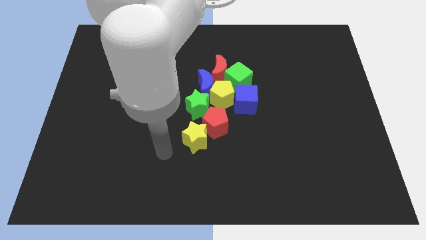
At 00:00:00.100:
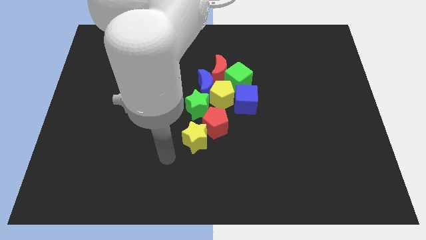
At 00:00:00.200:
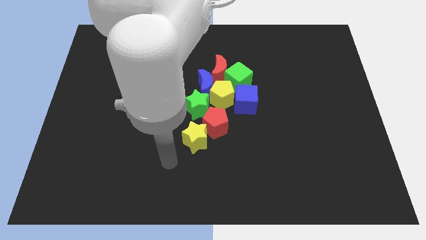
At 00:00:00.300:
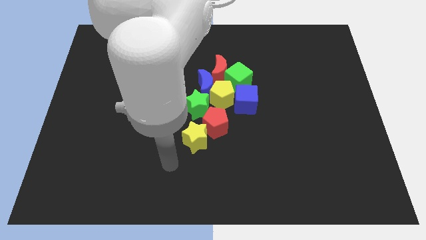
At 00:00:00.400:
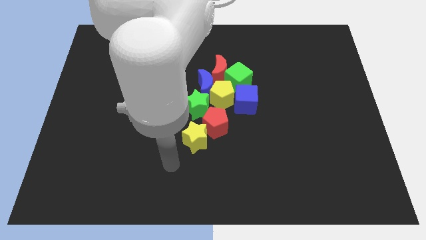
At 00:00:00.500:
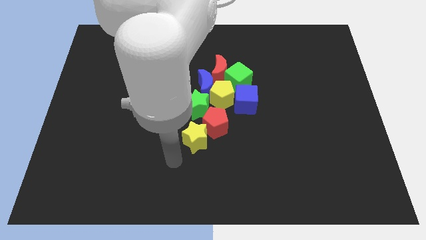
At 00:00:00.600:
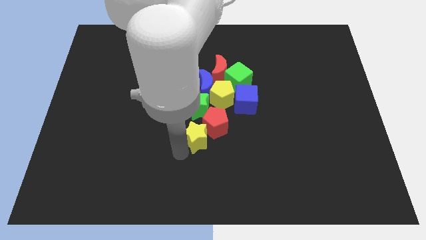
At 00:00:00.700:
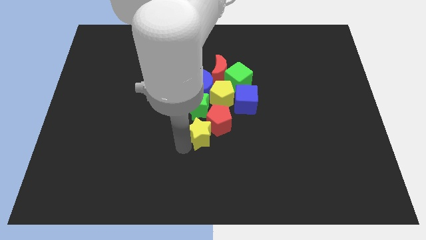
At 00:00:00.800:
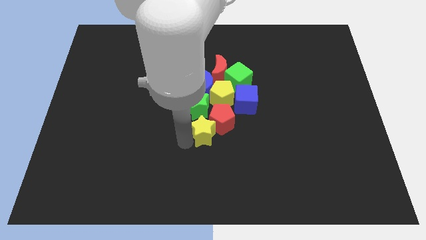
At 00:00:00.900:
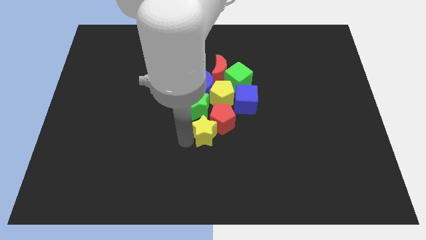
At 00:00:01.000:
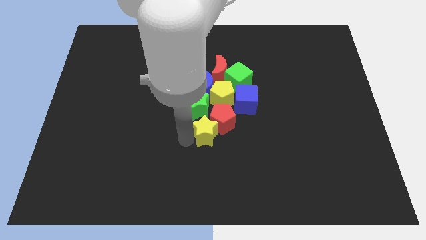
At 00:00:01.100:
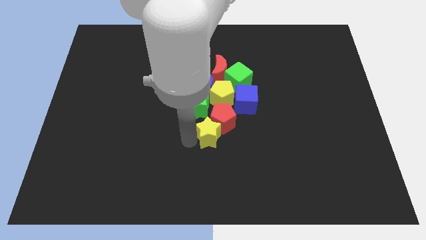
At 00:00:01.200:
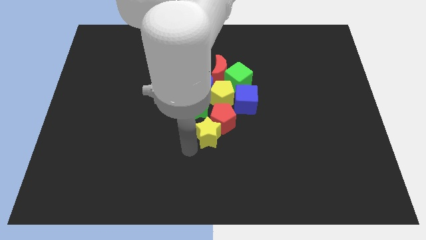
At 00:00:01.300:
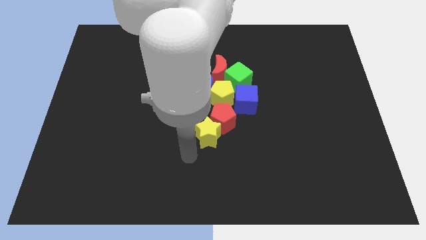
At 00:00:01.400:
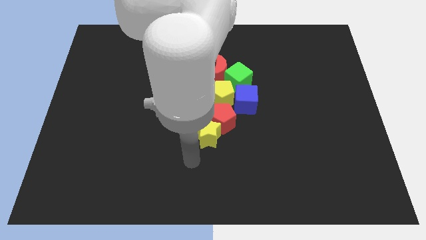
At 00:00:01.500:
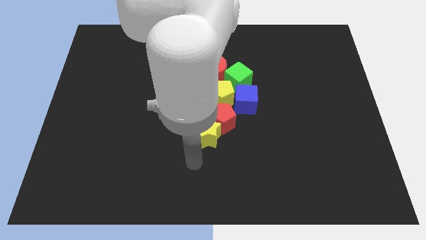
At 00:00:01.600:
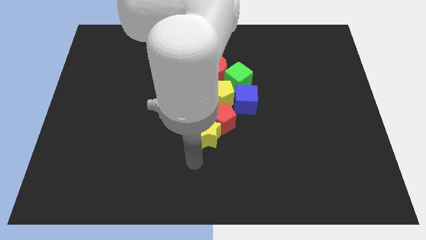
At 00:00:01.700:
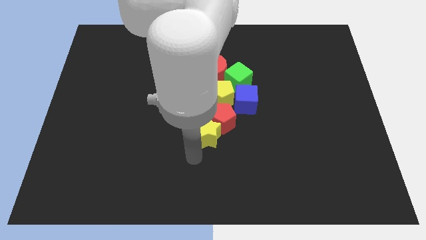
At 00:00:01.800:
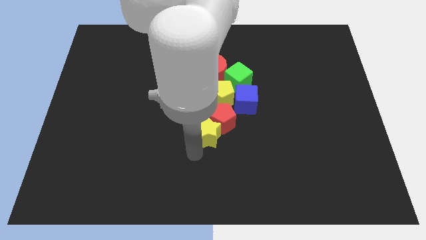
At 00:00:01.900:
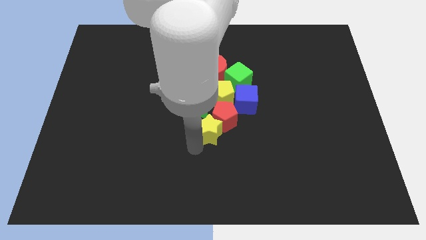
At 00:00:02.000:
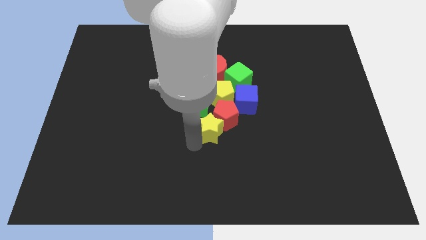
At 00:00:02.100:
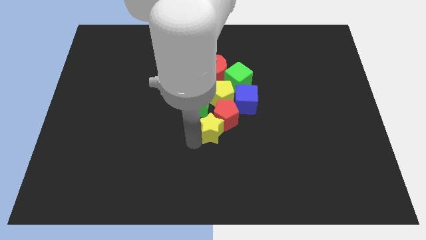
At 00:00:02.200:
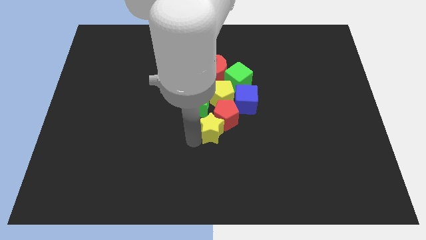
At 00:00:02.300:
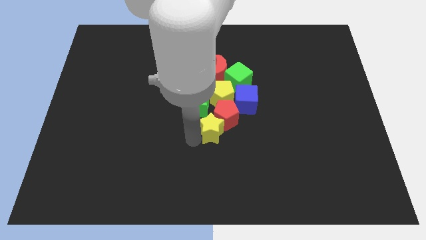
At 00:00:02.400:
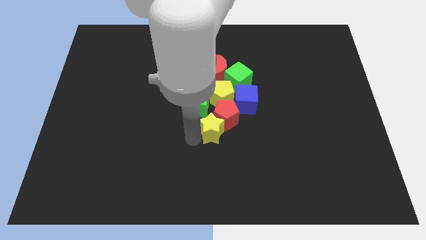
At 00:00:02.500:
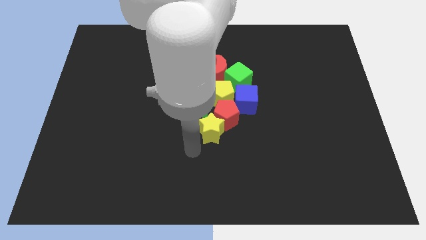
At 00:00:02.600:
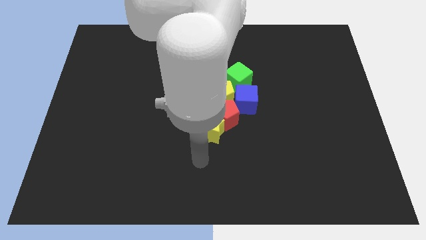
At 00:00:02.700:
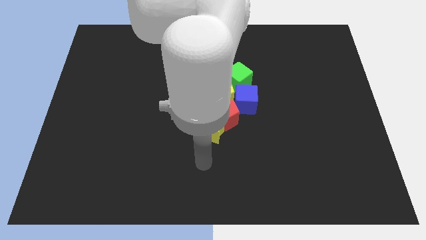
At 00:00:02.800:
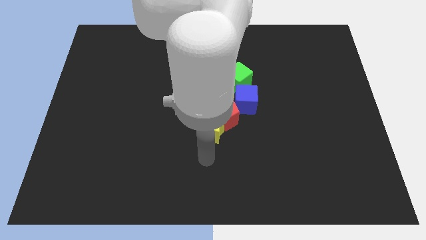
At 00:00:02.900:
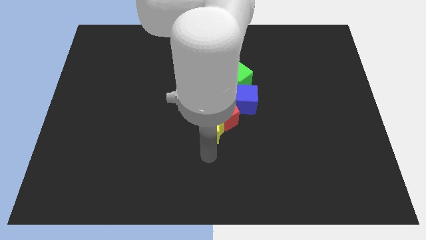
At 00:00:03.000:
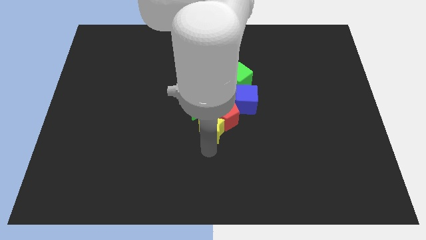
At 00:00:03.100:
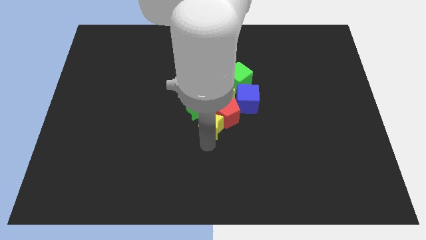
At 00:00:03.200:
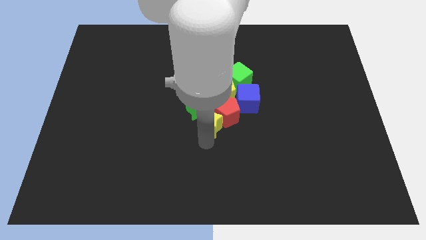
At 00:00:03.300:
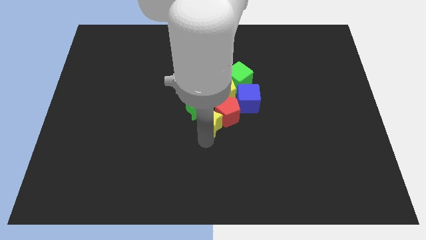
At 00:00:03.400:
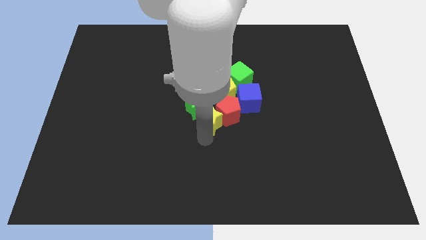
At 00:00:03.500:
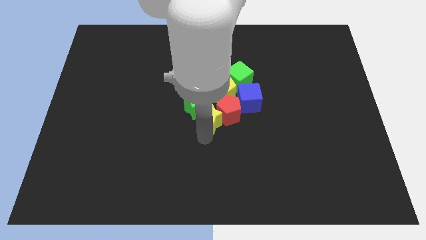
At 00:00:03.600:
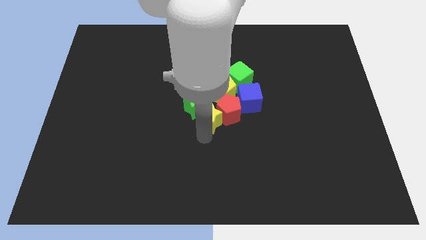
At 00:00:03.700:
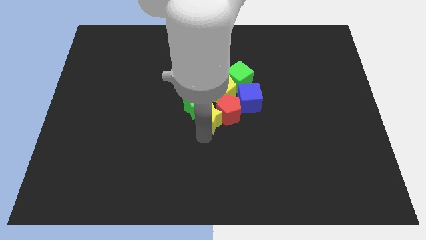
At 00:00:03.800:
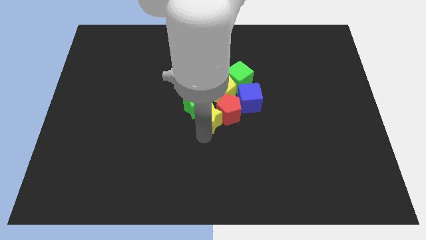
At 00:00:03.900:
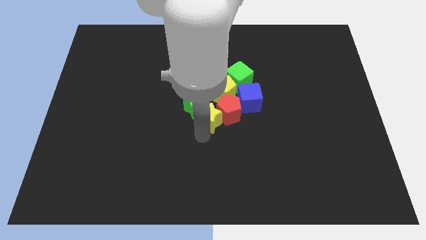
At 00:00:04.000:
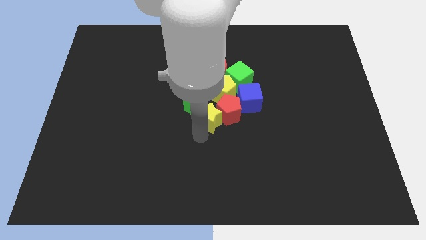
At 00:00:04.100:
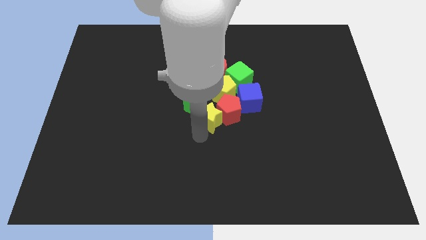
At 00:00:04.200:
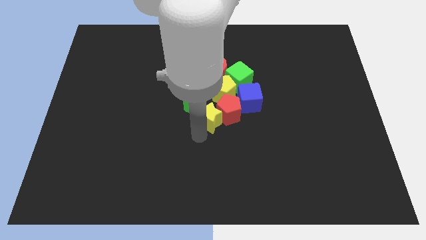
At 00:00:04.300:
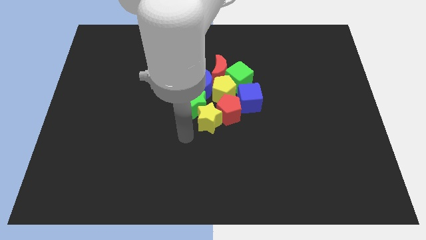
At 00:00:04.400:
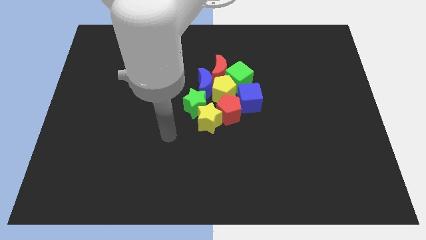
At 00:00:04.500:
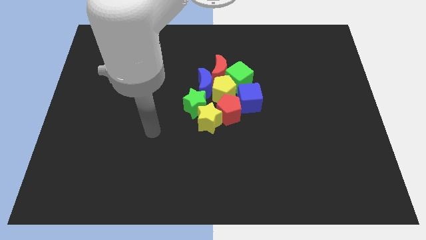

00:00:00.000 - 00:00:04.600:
push the yellow star into the group of blocks

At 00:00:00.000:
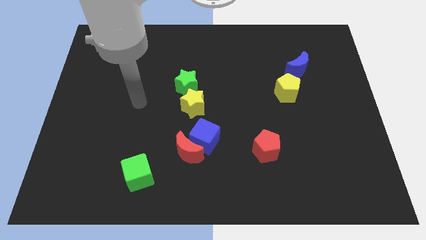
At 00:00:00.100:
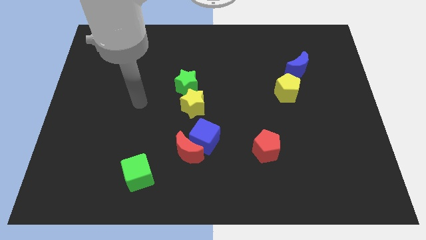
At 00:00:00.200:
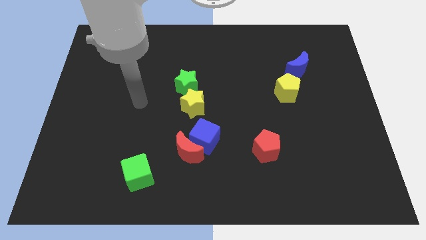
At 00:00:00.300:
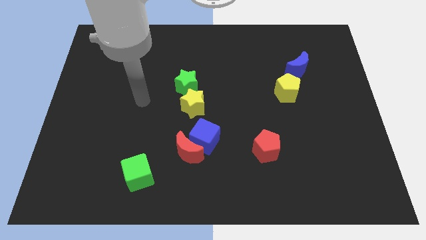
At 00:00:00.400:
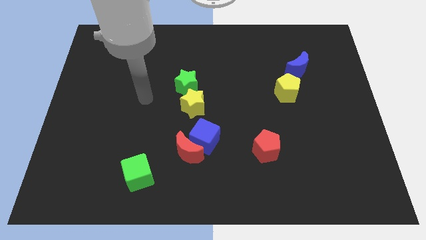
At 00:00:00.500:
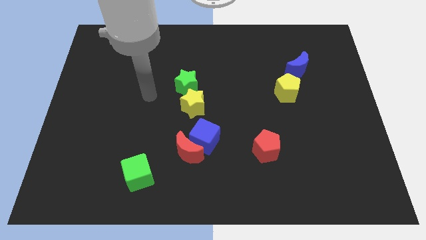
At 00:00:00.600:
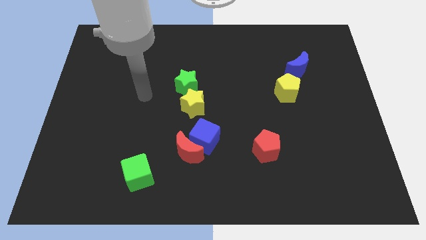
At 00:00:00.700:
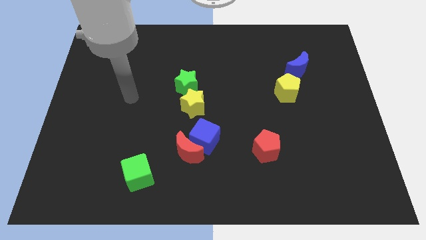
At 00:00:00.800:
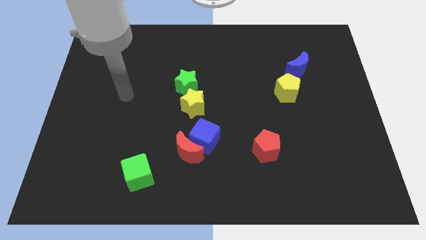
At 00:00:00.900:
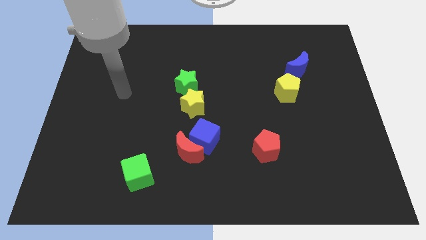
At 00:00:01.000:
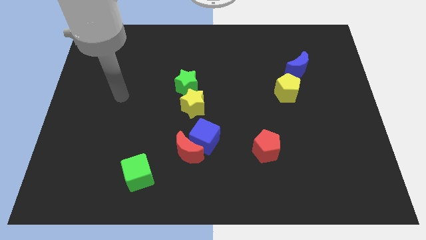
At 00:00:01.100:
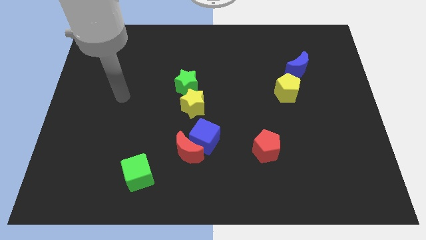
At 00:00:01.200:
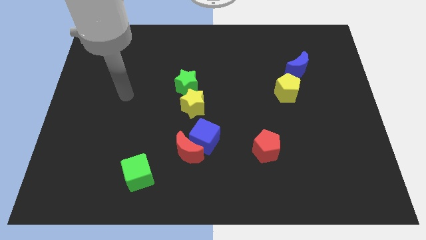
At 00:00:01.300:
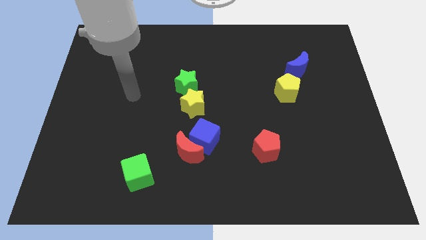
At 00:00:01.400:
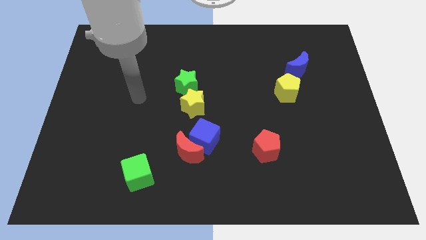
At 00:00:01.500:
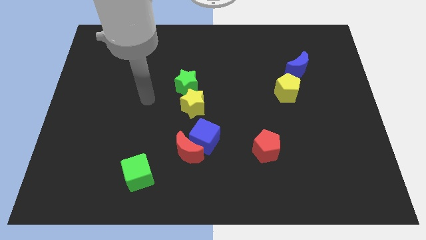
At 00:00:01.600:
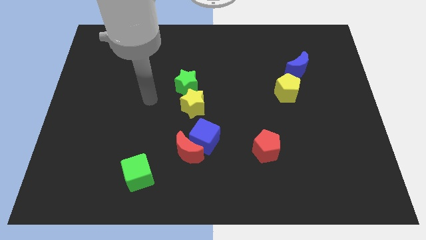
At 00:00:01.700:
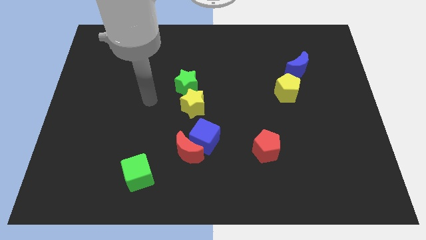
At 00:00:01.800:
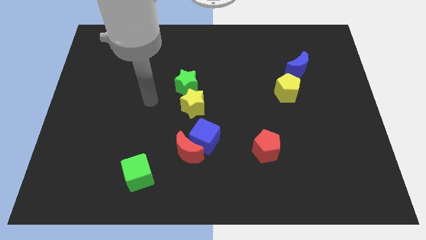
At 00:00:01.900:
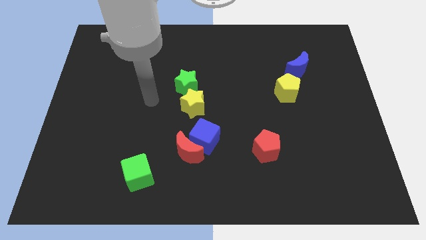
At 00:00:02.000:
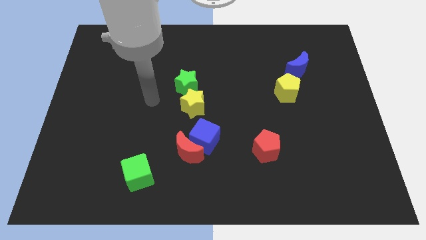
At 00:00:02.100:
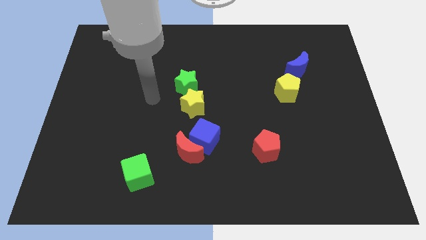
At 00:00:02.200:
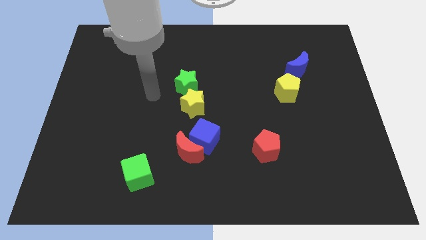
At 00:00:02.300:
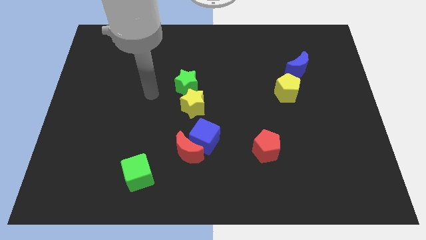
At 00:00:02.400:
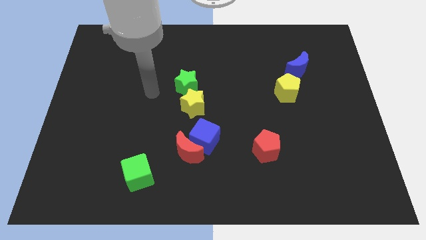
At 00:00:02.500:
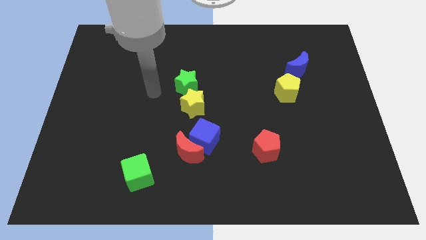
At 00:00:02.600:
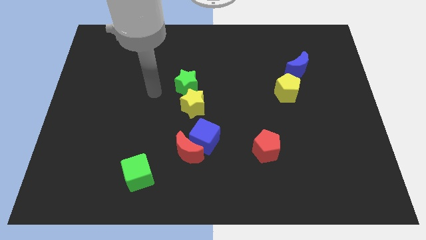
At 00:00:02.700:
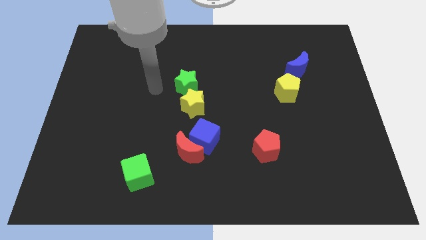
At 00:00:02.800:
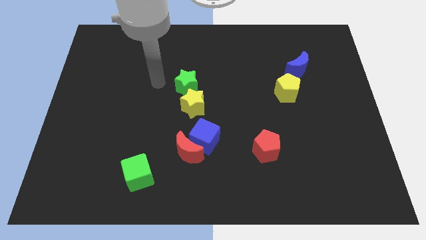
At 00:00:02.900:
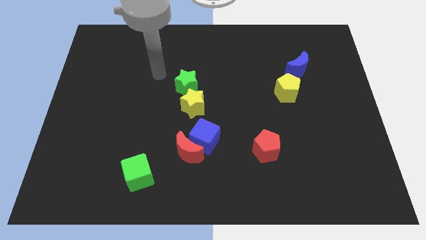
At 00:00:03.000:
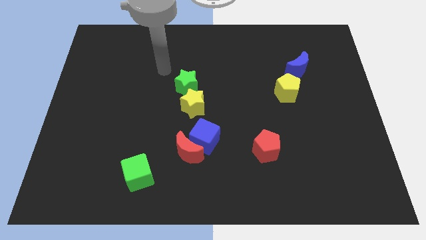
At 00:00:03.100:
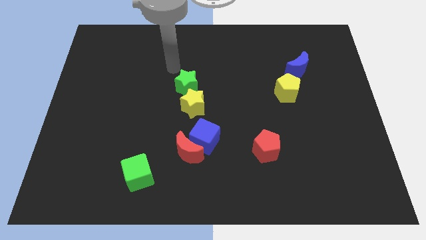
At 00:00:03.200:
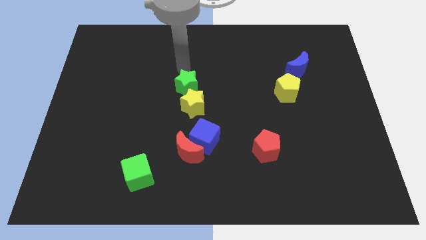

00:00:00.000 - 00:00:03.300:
move the arm above the green star

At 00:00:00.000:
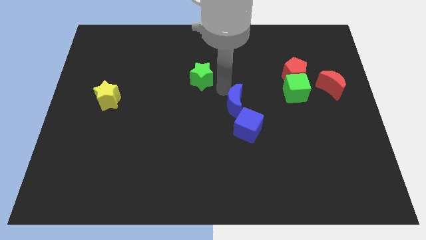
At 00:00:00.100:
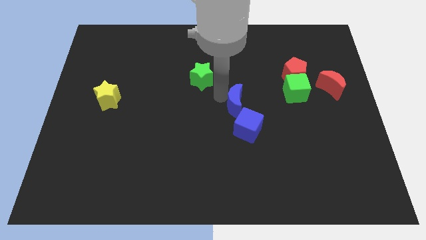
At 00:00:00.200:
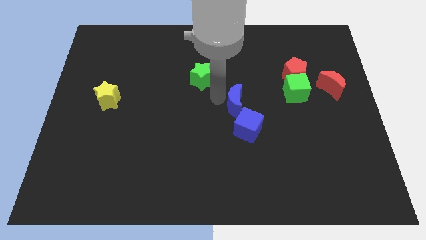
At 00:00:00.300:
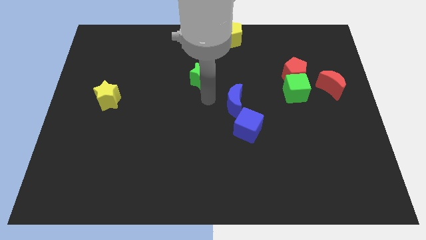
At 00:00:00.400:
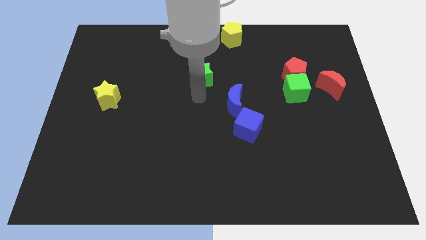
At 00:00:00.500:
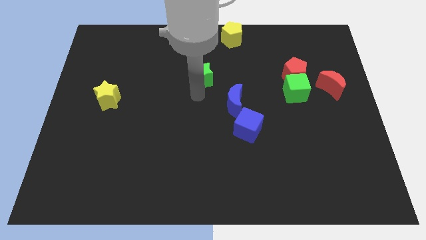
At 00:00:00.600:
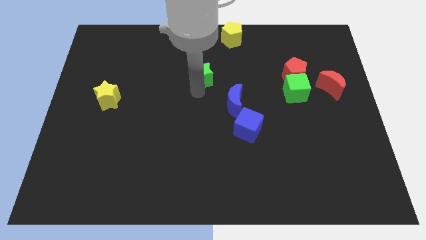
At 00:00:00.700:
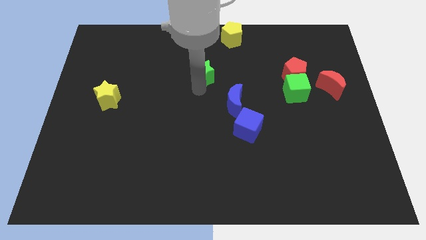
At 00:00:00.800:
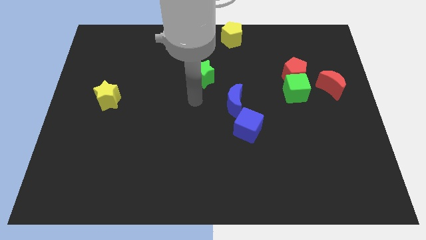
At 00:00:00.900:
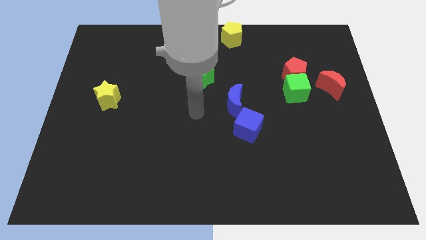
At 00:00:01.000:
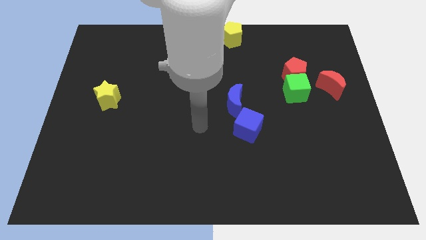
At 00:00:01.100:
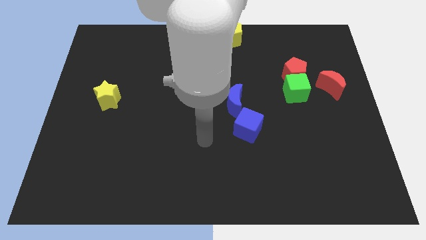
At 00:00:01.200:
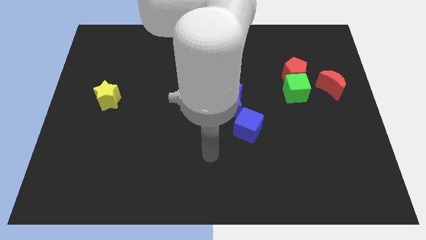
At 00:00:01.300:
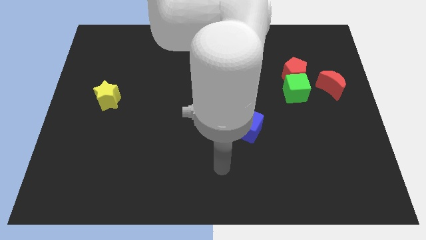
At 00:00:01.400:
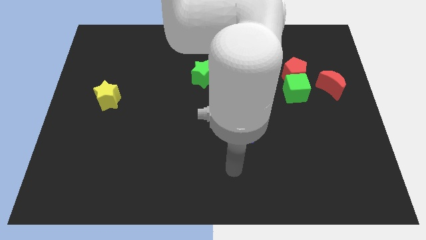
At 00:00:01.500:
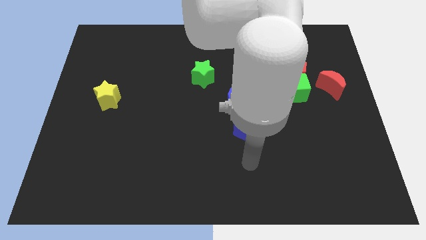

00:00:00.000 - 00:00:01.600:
move the green star slightly up
